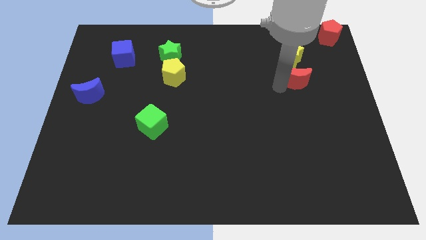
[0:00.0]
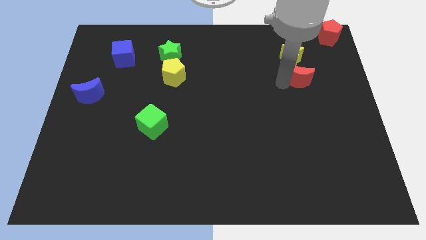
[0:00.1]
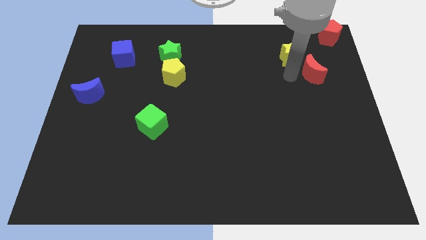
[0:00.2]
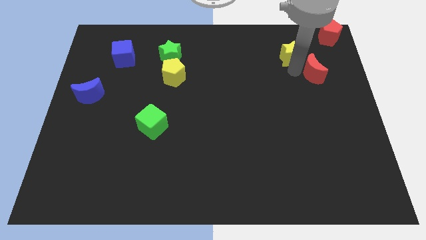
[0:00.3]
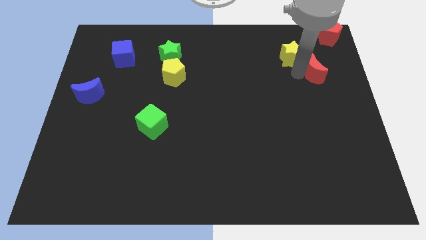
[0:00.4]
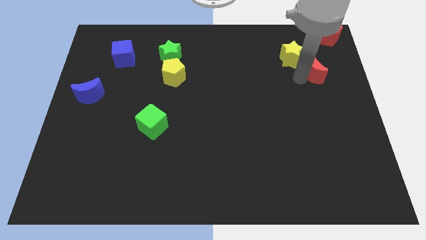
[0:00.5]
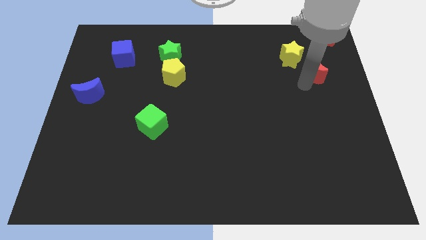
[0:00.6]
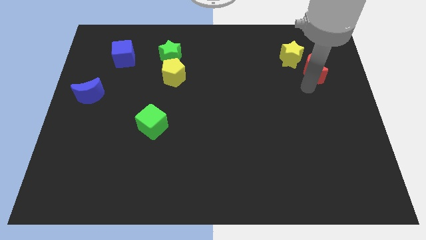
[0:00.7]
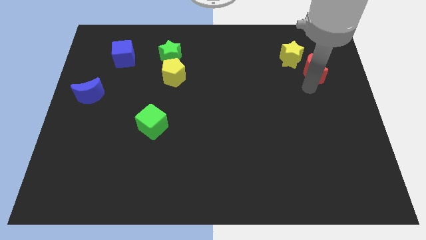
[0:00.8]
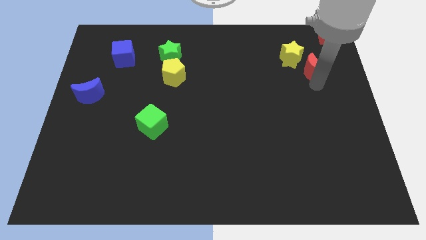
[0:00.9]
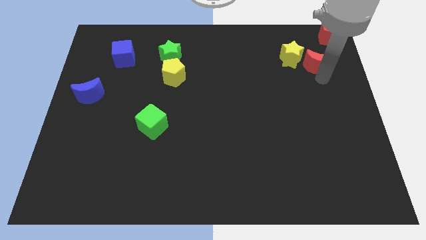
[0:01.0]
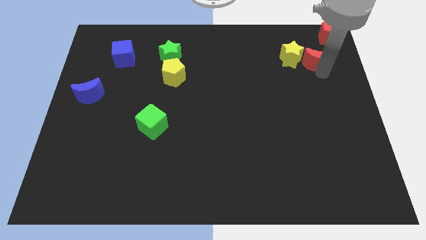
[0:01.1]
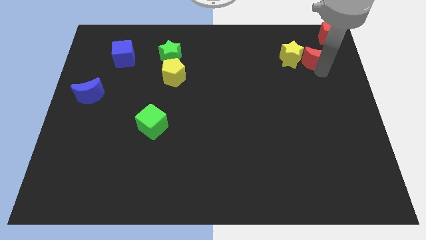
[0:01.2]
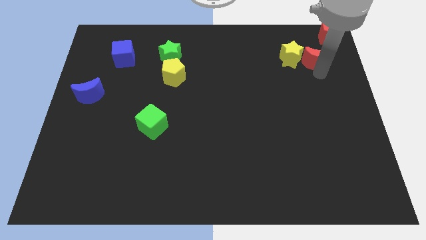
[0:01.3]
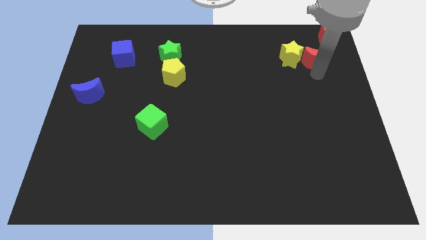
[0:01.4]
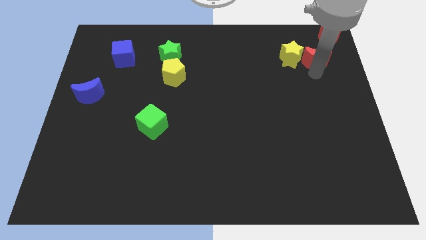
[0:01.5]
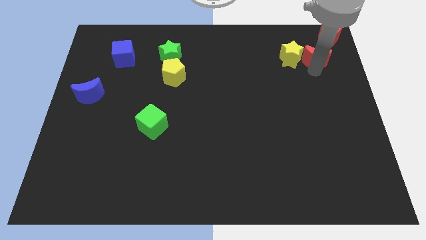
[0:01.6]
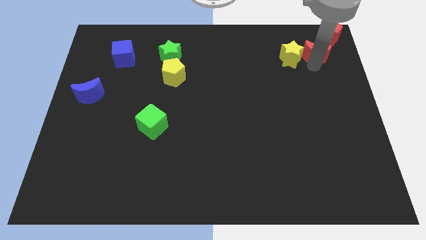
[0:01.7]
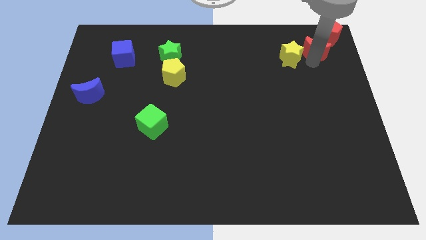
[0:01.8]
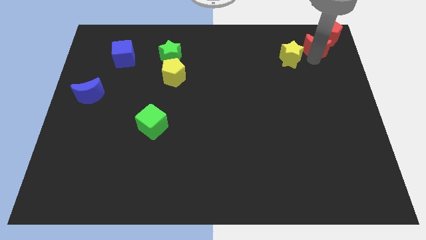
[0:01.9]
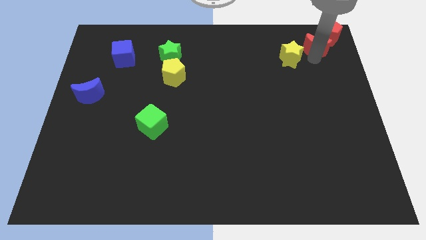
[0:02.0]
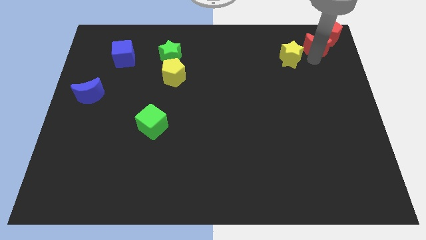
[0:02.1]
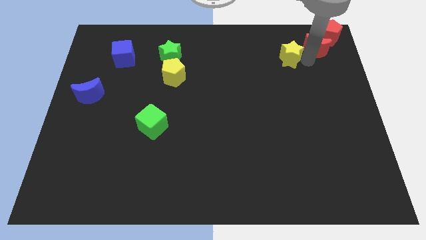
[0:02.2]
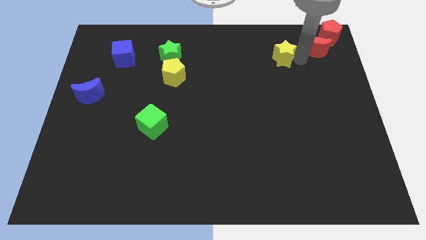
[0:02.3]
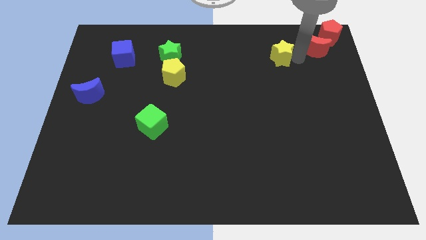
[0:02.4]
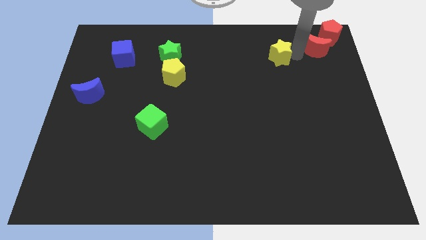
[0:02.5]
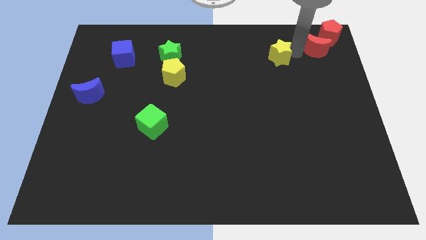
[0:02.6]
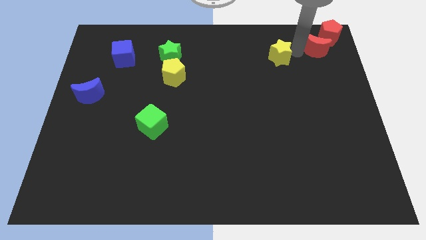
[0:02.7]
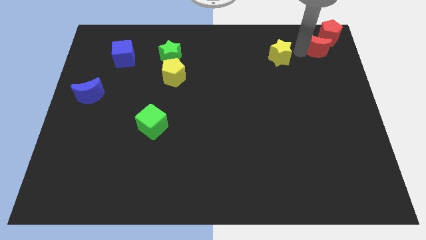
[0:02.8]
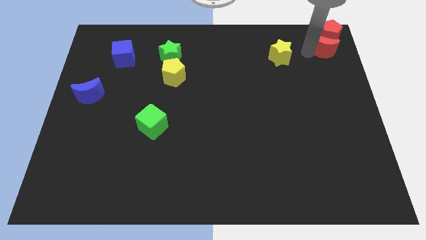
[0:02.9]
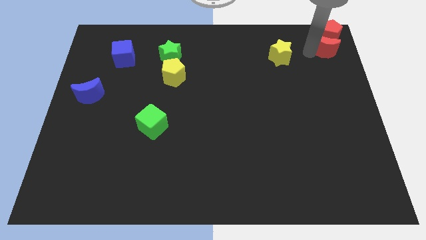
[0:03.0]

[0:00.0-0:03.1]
place the red crescent to the bottom of the red pentagon

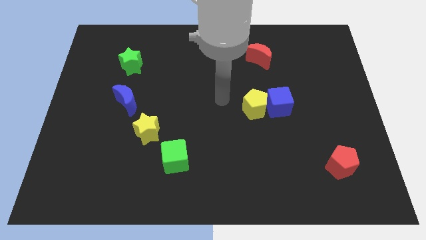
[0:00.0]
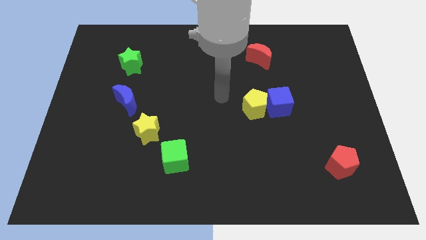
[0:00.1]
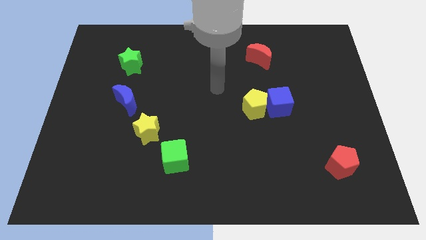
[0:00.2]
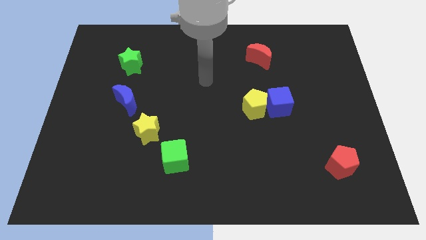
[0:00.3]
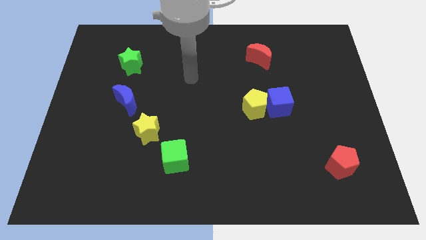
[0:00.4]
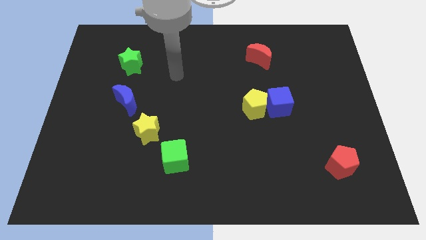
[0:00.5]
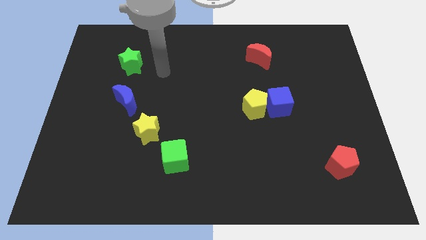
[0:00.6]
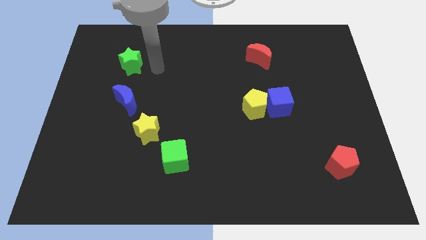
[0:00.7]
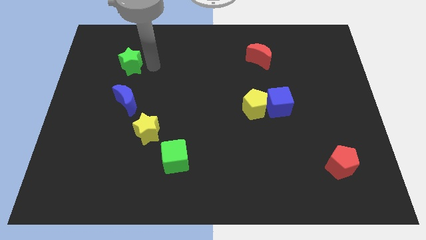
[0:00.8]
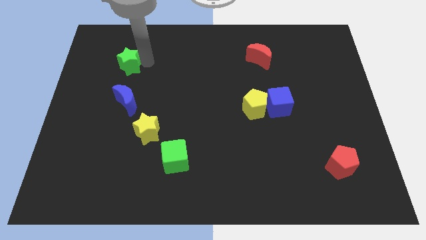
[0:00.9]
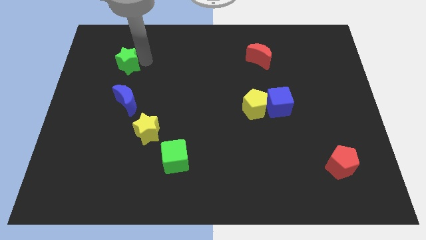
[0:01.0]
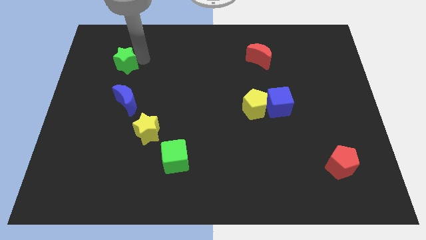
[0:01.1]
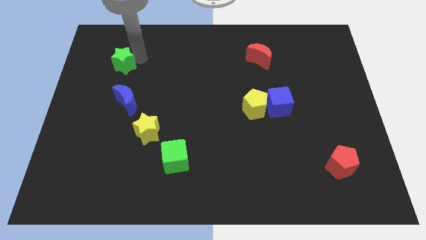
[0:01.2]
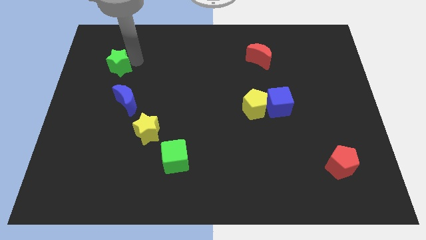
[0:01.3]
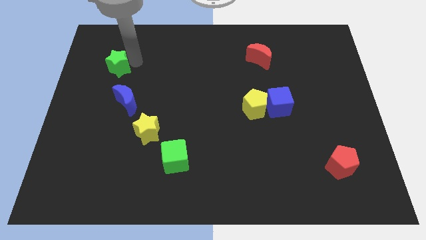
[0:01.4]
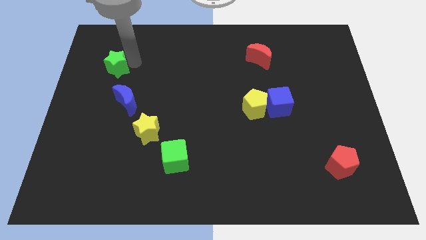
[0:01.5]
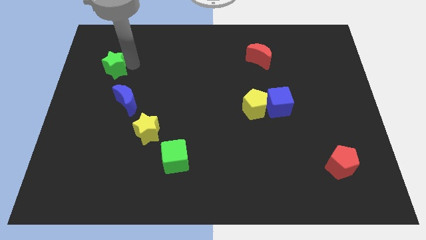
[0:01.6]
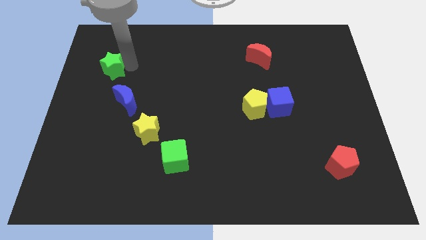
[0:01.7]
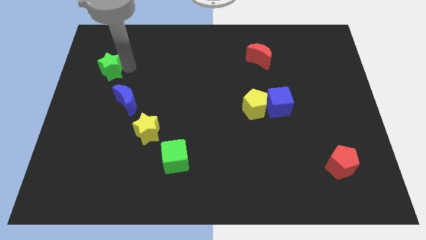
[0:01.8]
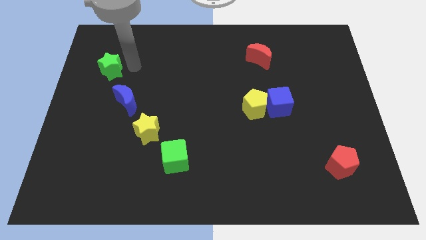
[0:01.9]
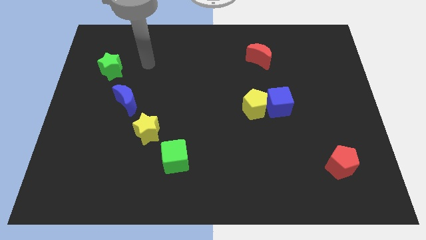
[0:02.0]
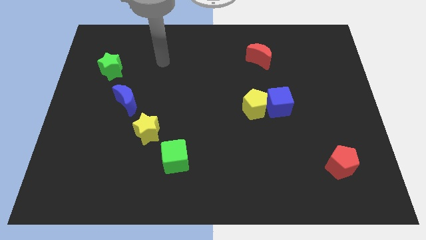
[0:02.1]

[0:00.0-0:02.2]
place the green star on top of the blue crescent

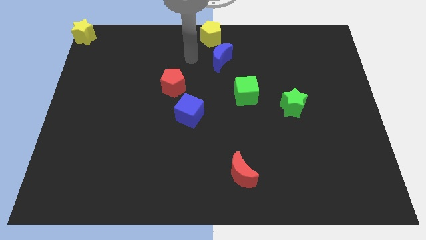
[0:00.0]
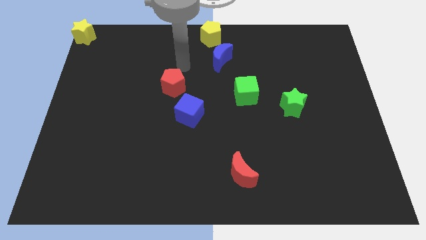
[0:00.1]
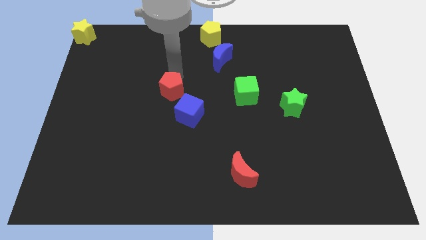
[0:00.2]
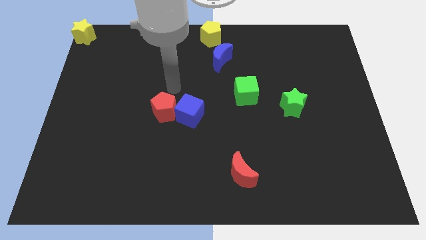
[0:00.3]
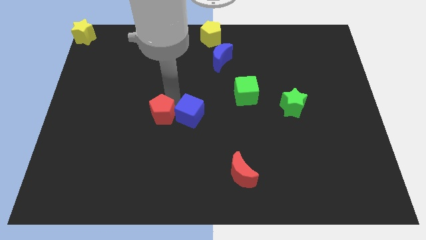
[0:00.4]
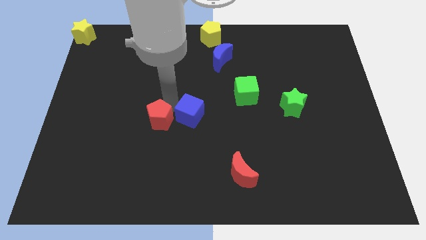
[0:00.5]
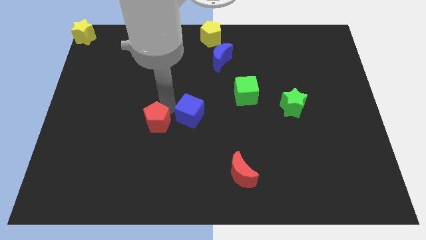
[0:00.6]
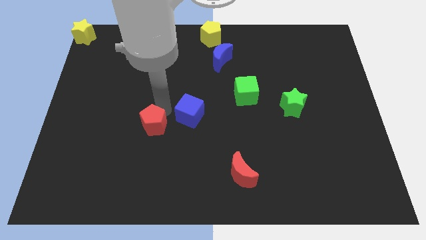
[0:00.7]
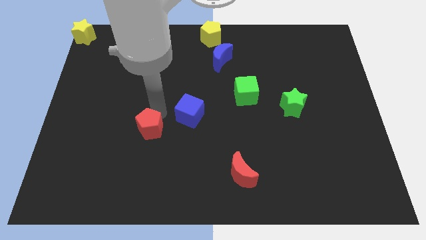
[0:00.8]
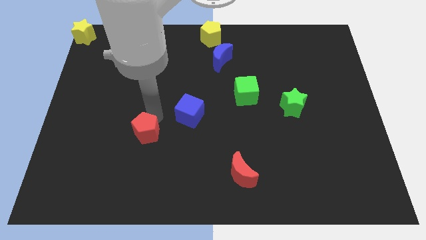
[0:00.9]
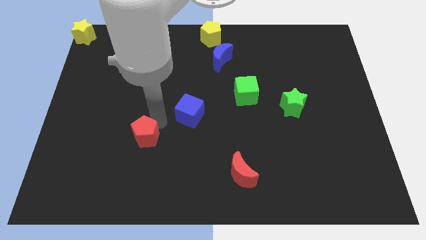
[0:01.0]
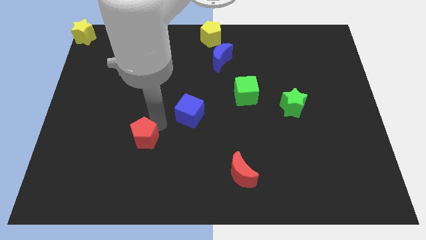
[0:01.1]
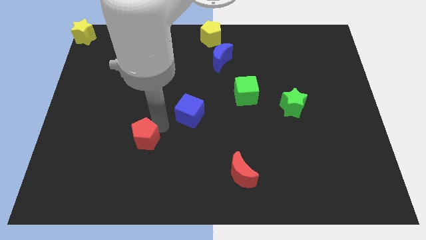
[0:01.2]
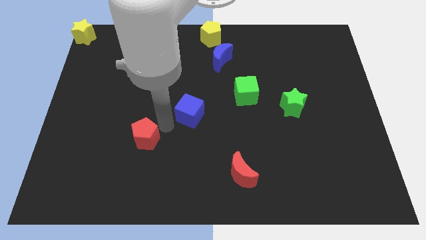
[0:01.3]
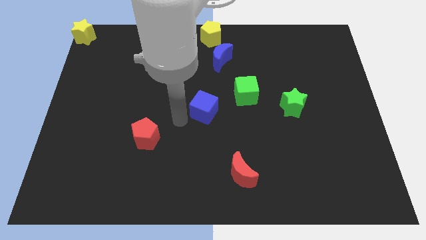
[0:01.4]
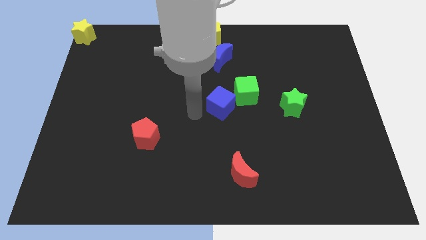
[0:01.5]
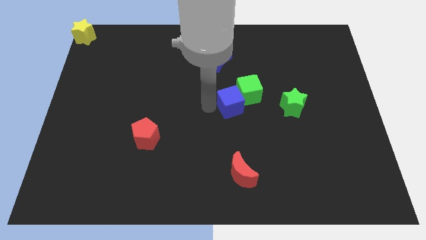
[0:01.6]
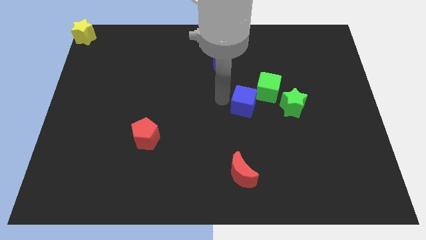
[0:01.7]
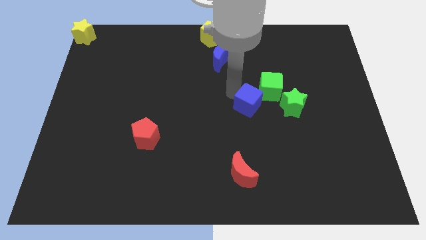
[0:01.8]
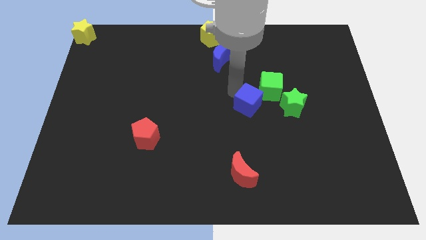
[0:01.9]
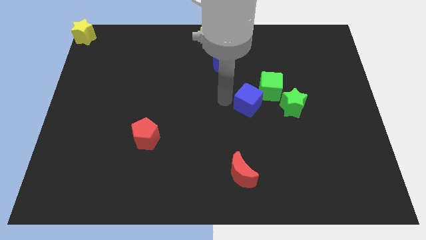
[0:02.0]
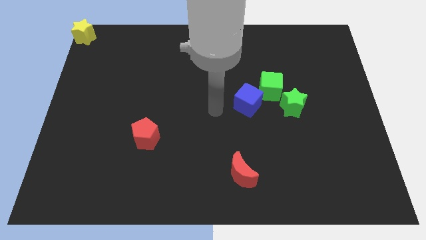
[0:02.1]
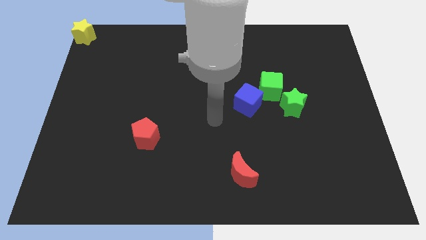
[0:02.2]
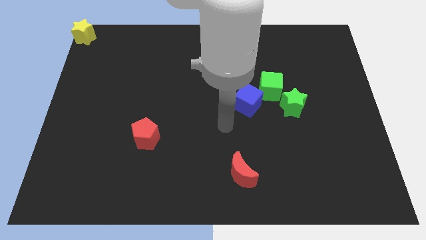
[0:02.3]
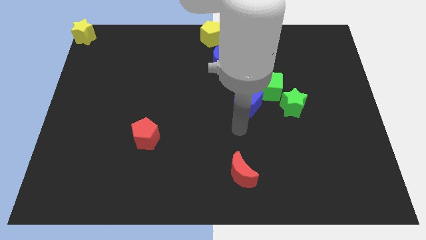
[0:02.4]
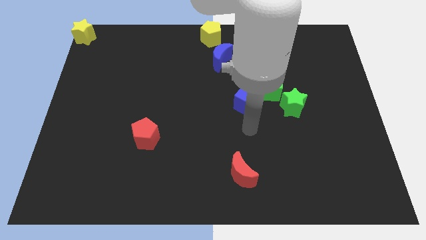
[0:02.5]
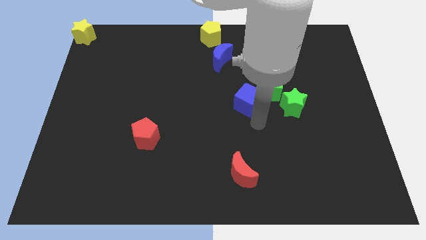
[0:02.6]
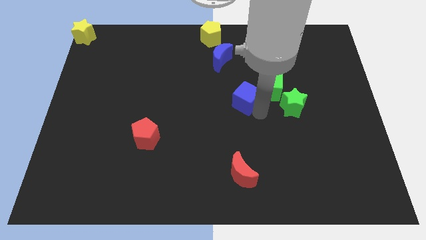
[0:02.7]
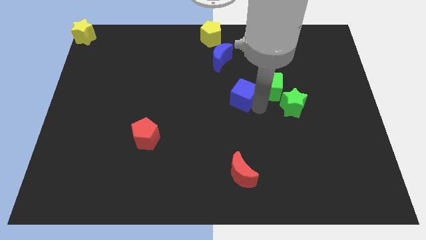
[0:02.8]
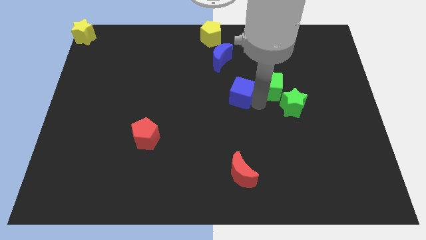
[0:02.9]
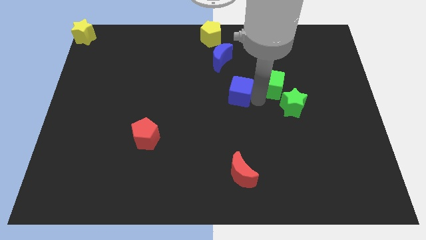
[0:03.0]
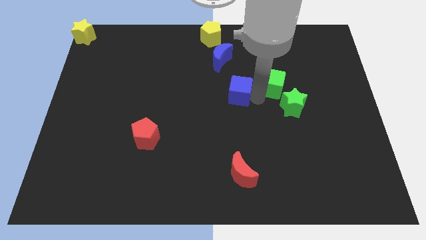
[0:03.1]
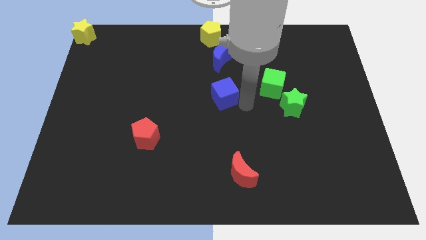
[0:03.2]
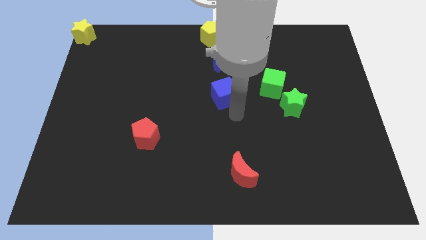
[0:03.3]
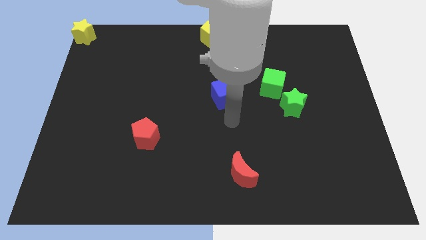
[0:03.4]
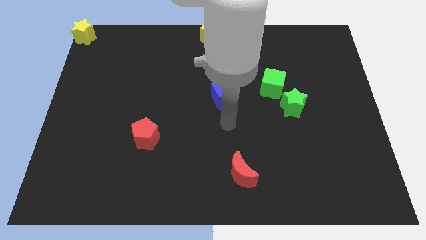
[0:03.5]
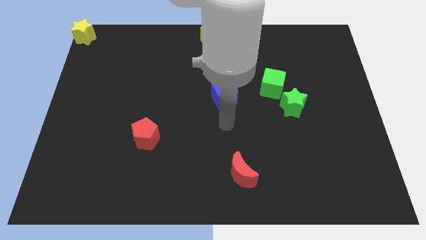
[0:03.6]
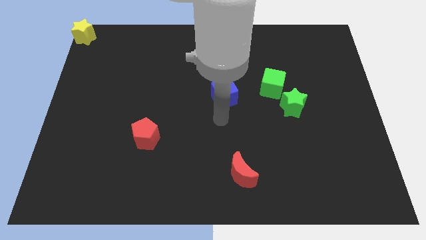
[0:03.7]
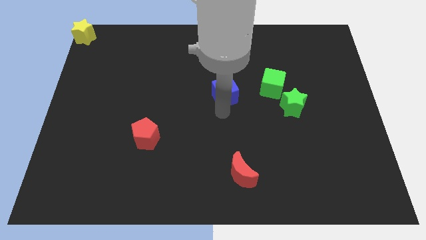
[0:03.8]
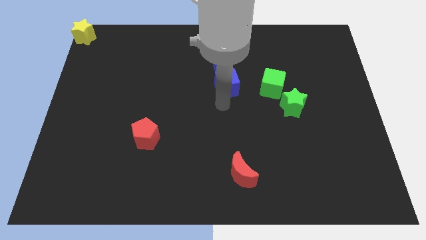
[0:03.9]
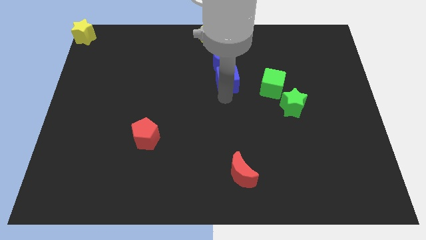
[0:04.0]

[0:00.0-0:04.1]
separate thered pentagon from a group of object
